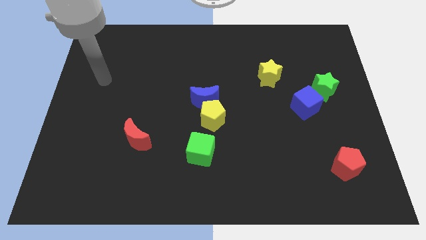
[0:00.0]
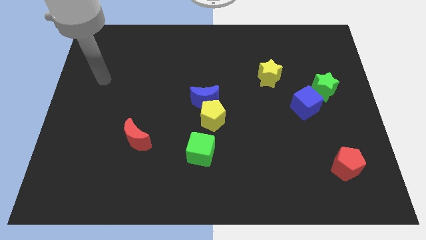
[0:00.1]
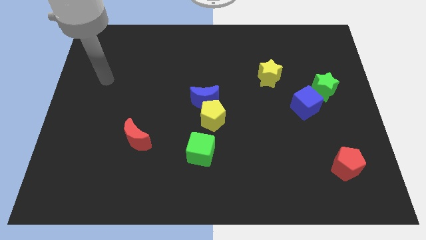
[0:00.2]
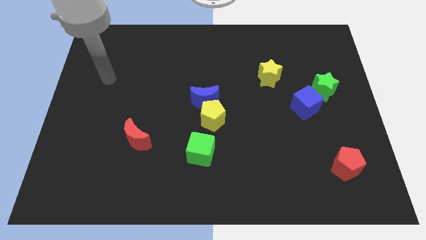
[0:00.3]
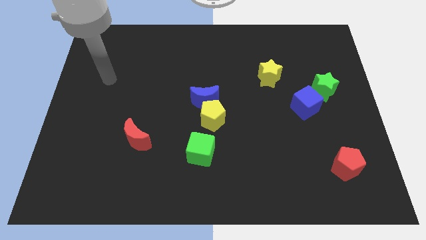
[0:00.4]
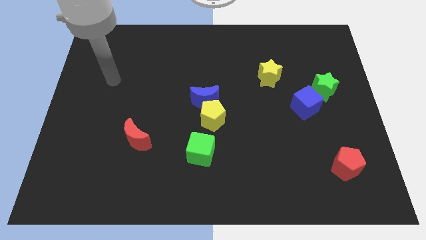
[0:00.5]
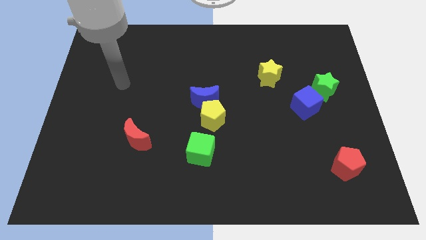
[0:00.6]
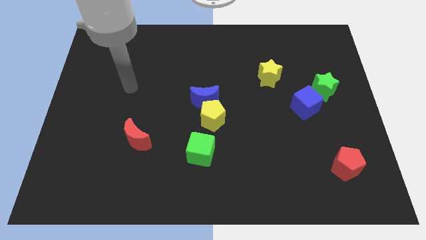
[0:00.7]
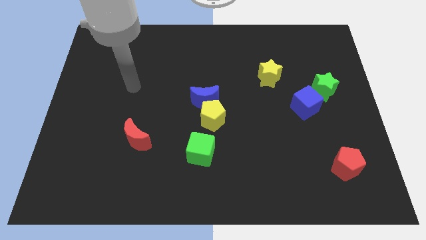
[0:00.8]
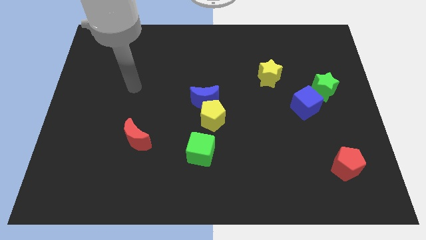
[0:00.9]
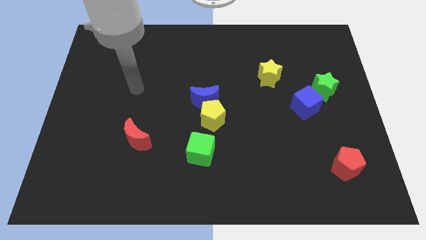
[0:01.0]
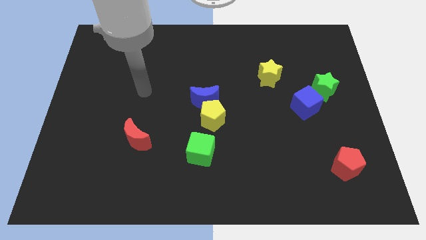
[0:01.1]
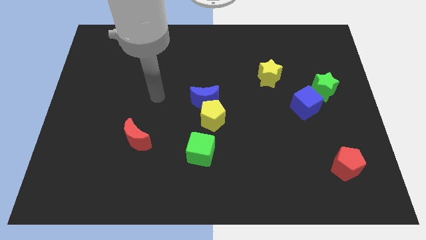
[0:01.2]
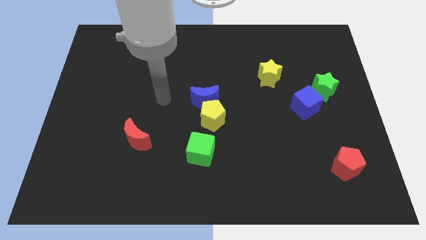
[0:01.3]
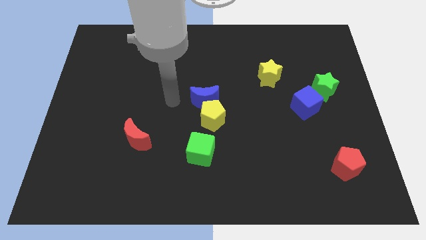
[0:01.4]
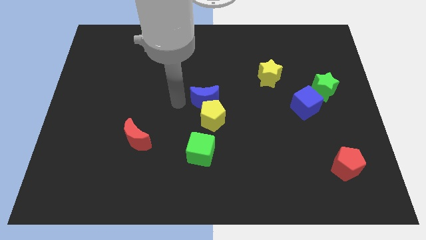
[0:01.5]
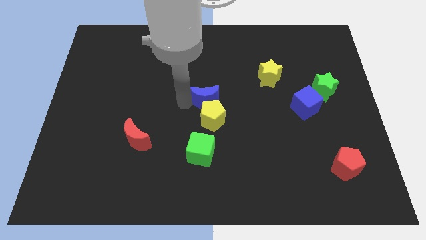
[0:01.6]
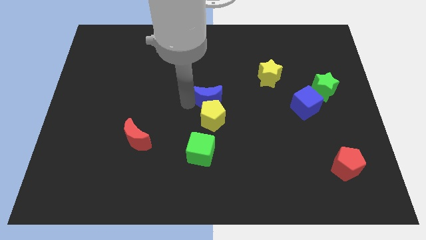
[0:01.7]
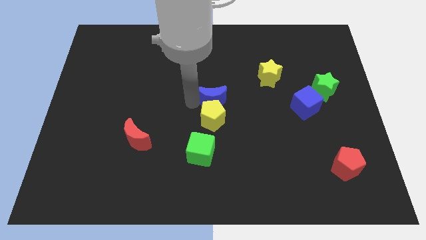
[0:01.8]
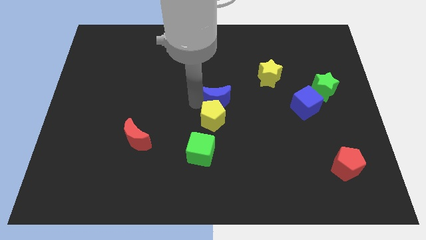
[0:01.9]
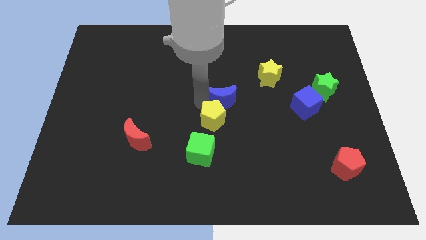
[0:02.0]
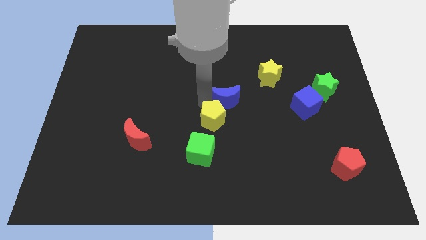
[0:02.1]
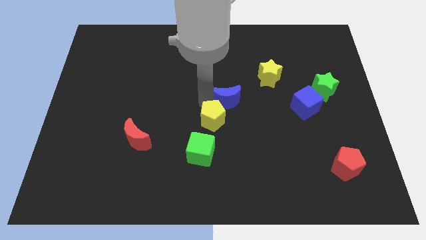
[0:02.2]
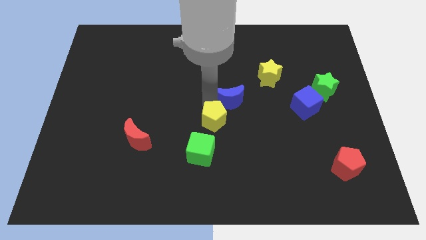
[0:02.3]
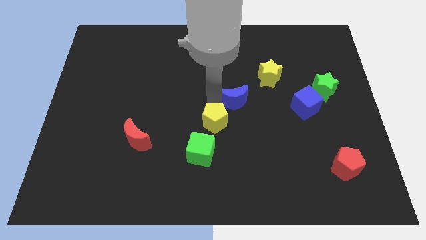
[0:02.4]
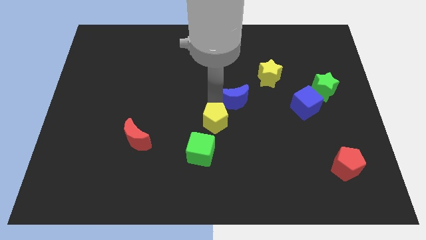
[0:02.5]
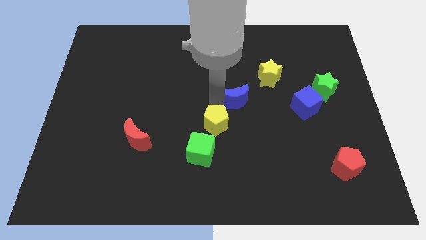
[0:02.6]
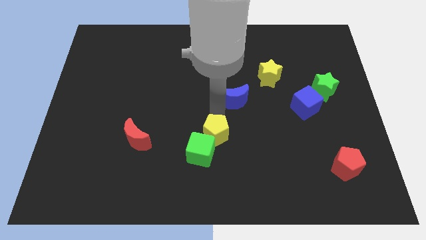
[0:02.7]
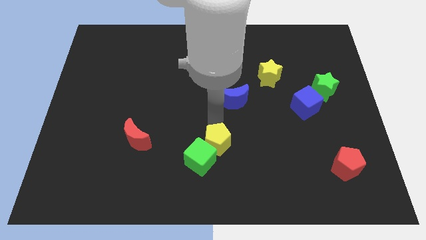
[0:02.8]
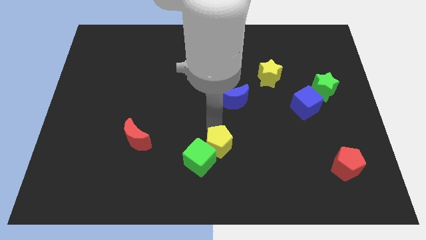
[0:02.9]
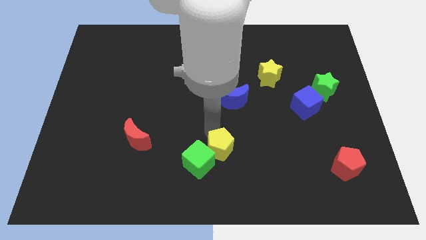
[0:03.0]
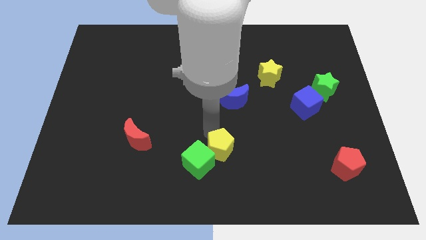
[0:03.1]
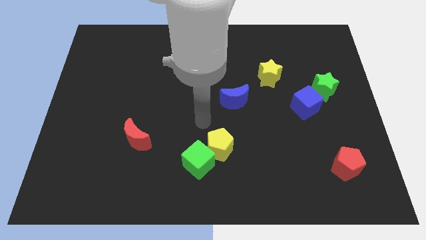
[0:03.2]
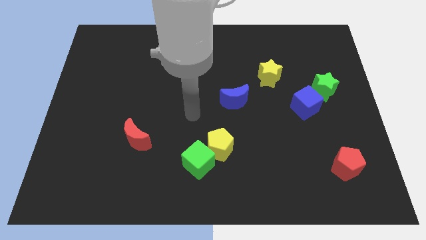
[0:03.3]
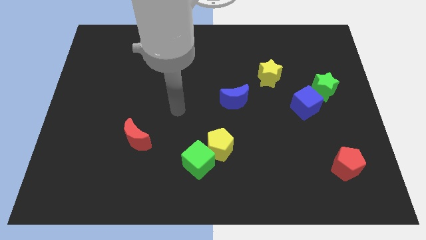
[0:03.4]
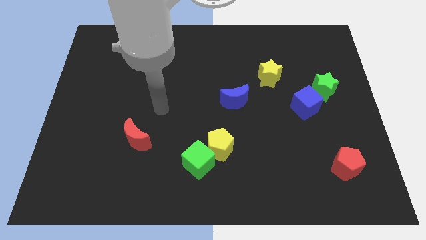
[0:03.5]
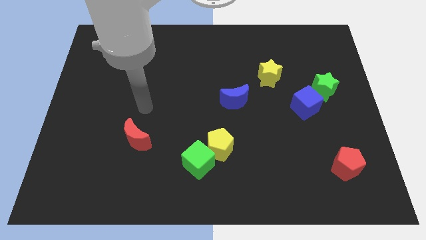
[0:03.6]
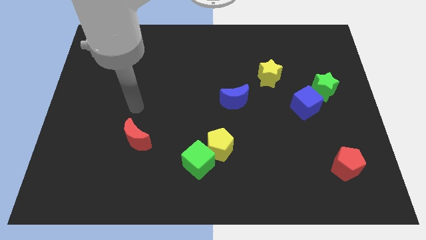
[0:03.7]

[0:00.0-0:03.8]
separate the blue crescent and the yellow pentagon

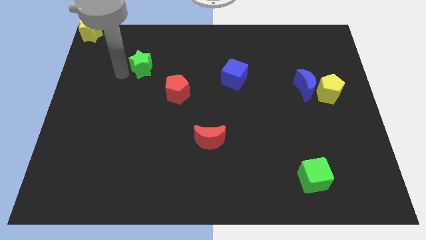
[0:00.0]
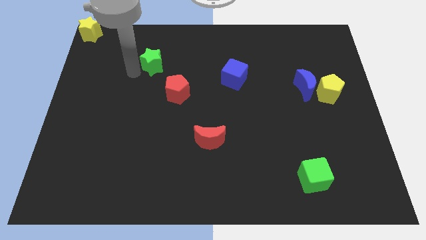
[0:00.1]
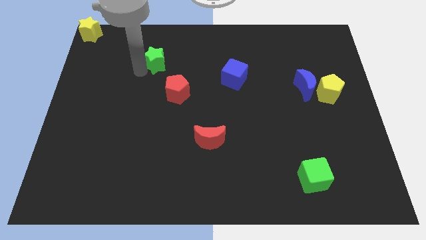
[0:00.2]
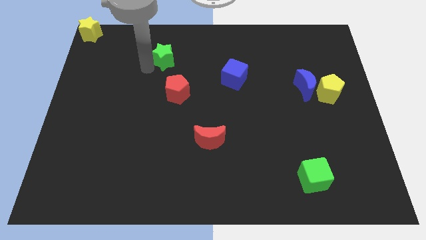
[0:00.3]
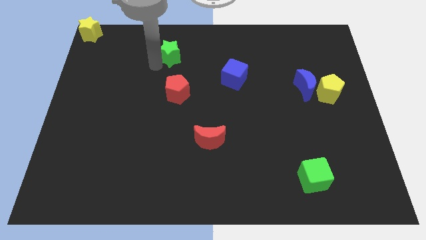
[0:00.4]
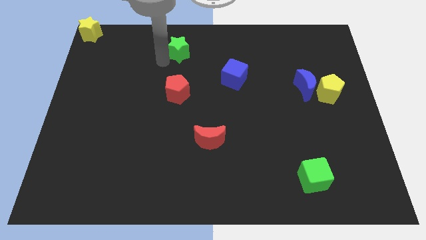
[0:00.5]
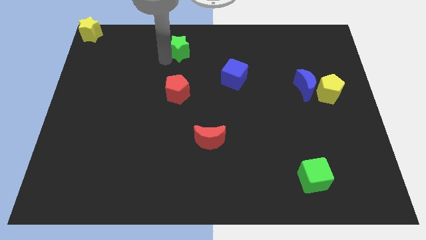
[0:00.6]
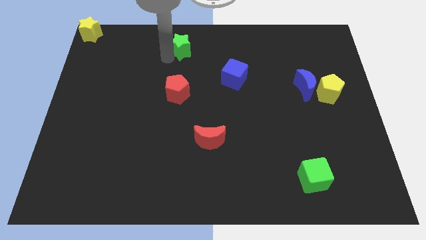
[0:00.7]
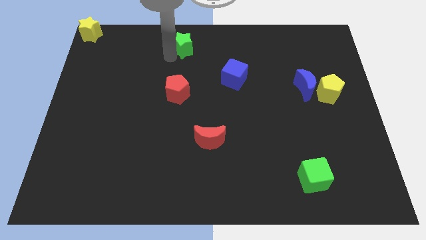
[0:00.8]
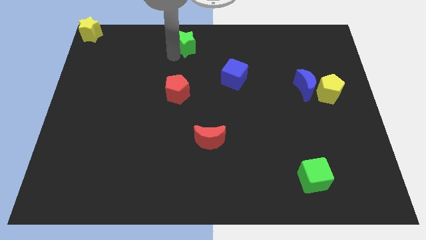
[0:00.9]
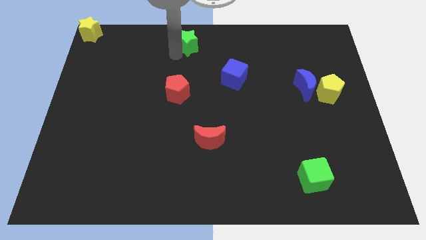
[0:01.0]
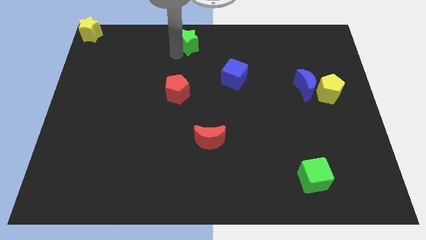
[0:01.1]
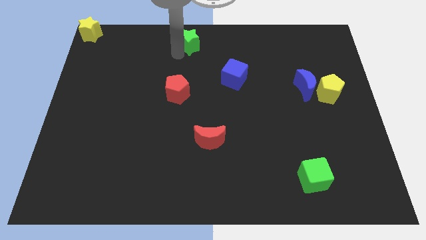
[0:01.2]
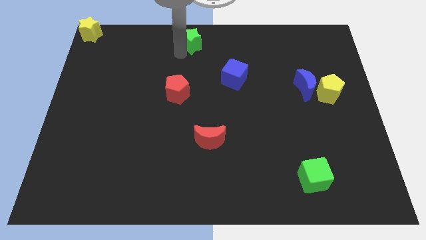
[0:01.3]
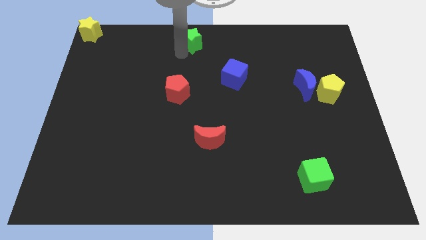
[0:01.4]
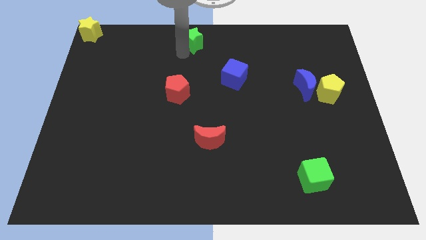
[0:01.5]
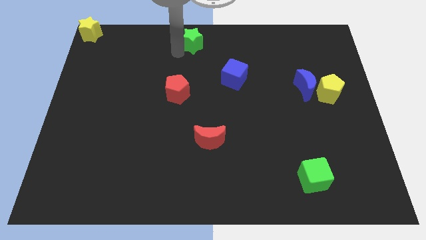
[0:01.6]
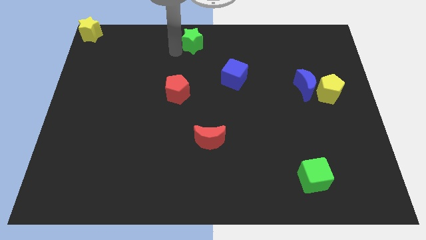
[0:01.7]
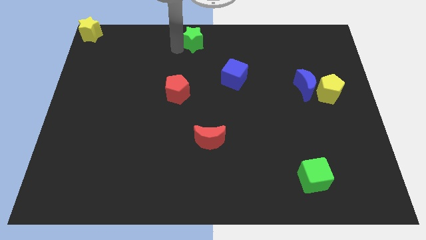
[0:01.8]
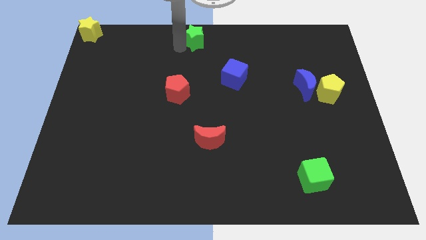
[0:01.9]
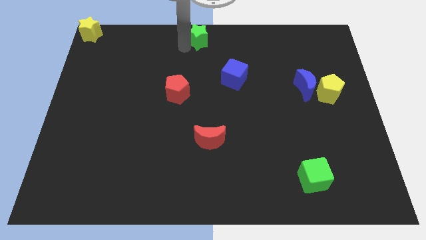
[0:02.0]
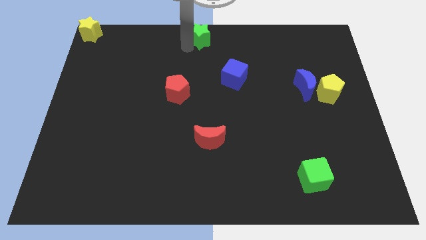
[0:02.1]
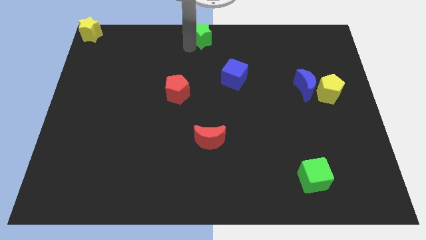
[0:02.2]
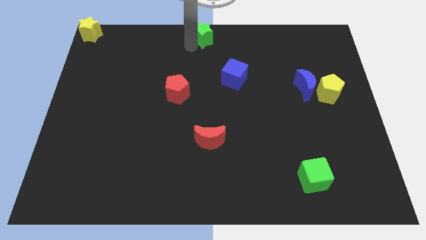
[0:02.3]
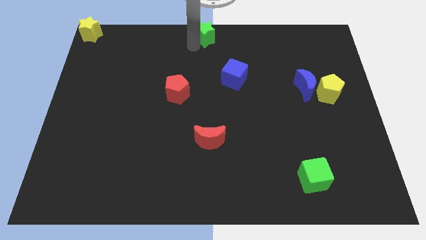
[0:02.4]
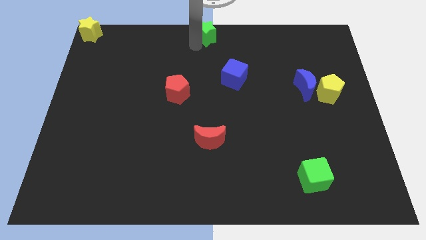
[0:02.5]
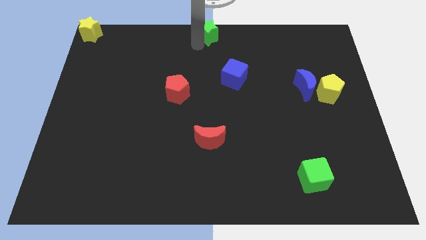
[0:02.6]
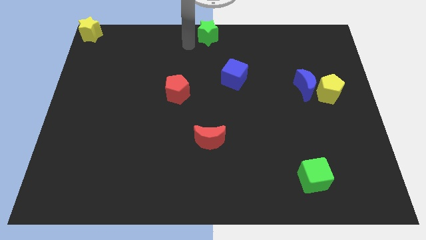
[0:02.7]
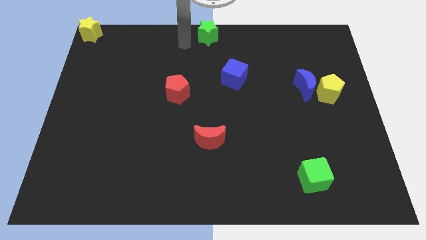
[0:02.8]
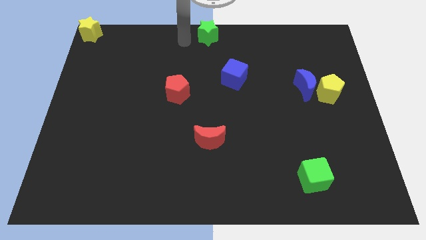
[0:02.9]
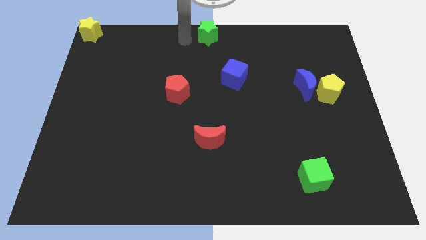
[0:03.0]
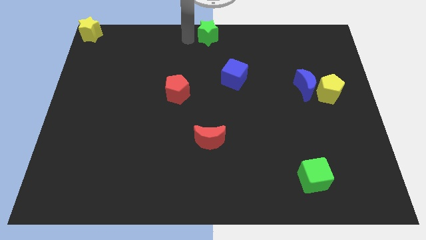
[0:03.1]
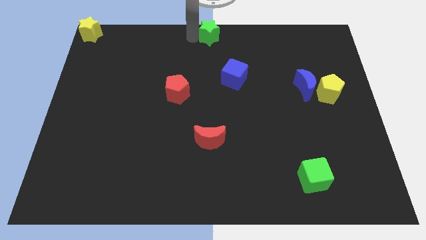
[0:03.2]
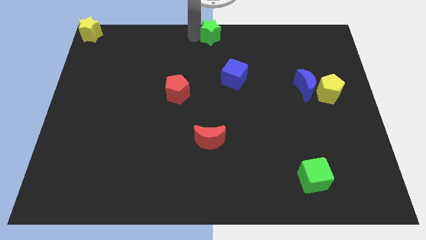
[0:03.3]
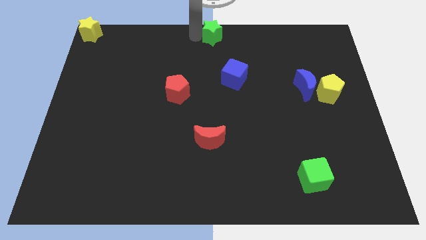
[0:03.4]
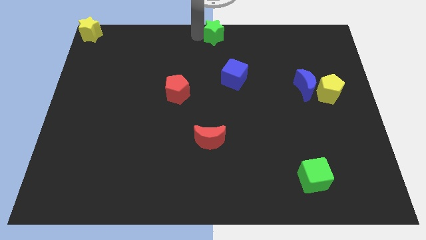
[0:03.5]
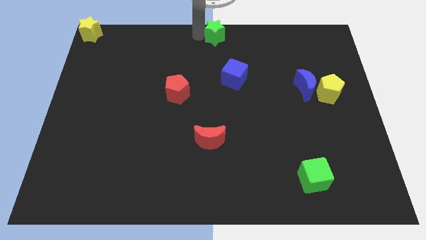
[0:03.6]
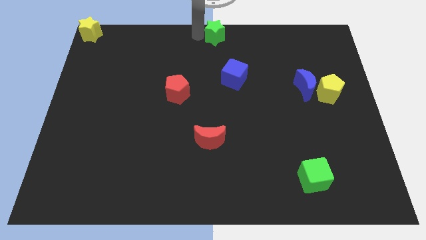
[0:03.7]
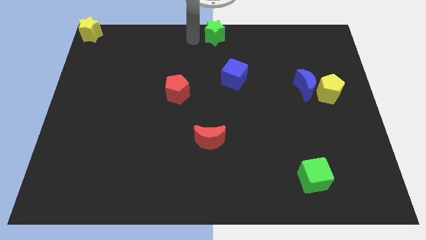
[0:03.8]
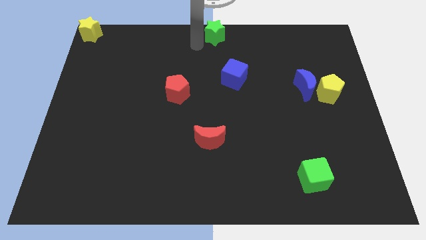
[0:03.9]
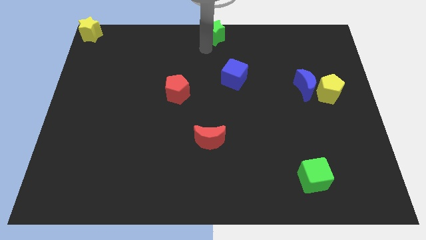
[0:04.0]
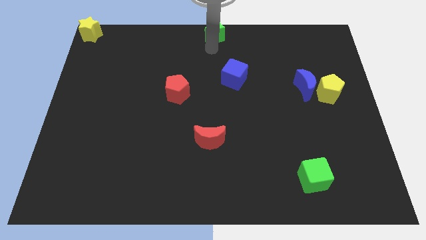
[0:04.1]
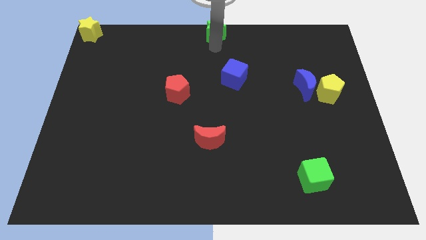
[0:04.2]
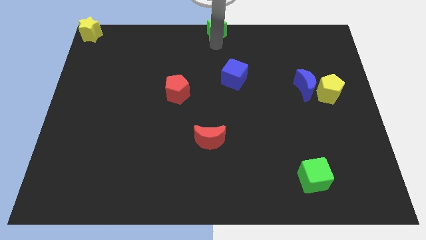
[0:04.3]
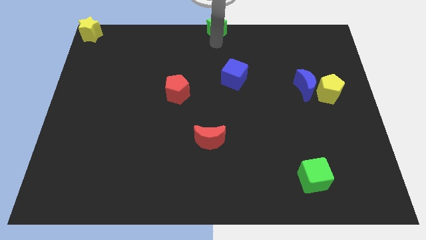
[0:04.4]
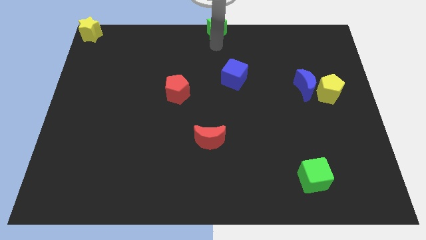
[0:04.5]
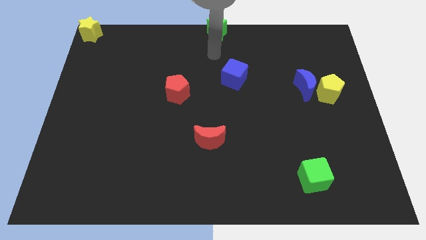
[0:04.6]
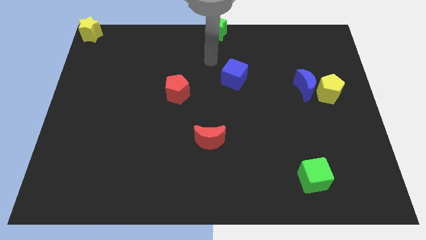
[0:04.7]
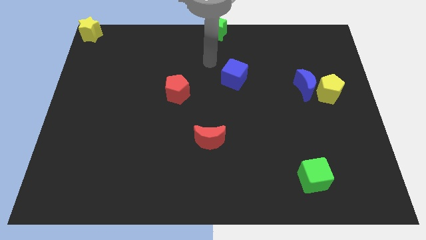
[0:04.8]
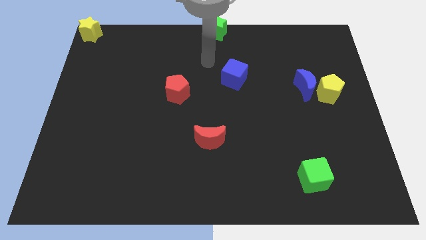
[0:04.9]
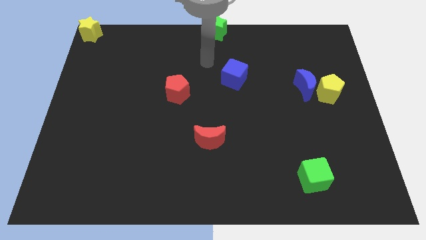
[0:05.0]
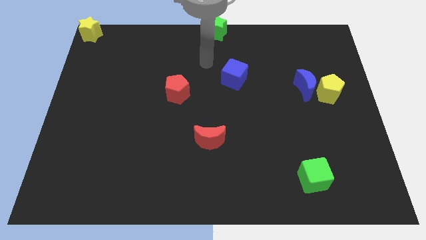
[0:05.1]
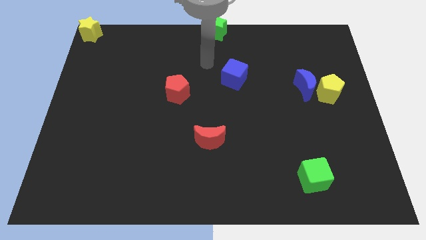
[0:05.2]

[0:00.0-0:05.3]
move the green star to the middle of the board at top side

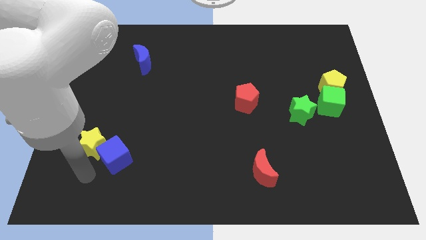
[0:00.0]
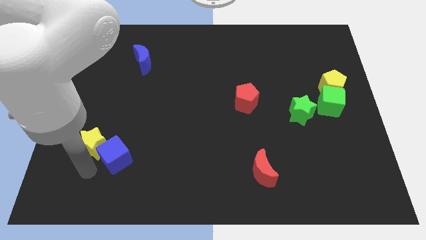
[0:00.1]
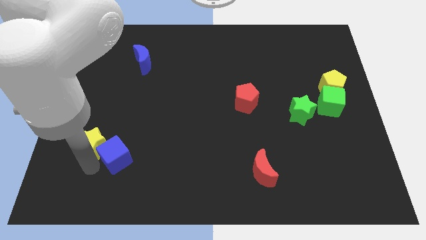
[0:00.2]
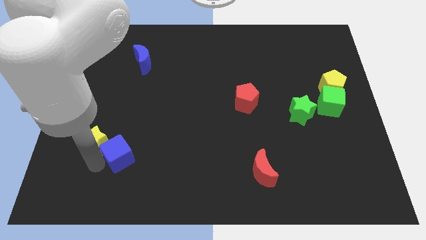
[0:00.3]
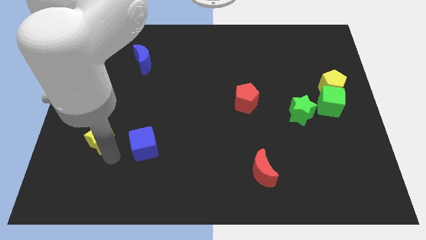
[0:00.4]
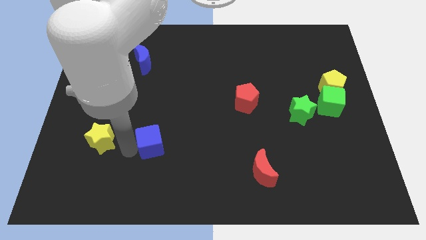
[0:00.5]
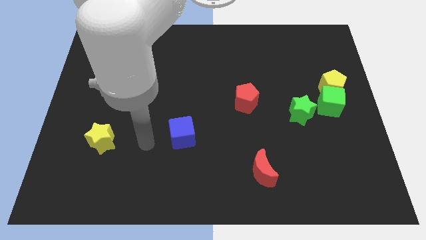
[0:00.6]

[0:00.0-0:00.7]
push the blue cube away from the yellow star
